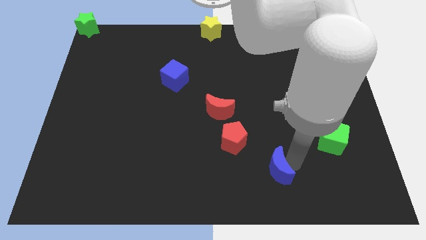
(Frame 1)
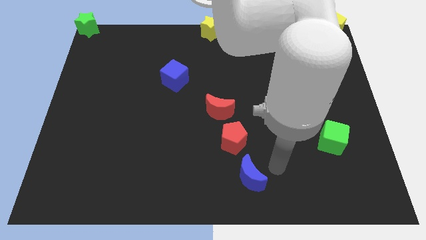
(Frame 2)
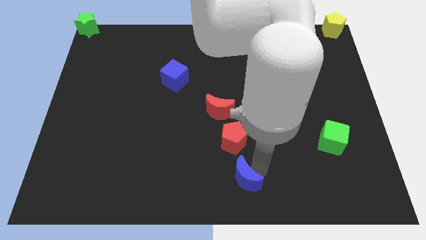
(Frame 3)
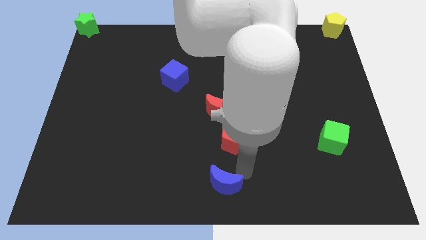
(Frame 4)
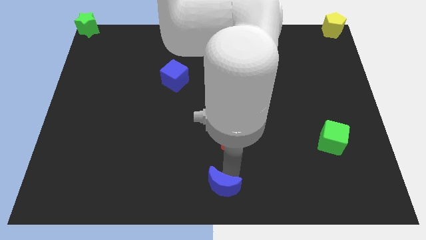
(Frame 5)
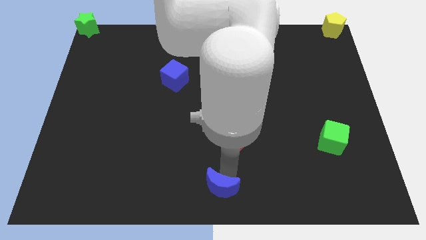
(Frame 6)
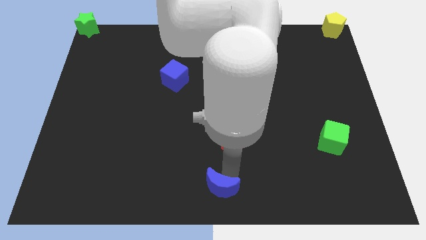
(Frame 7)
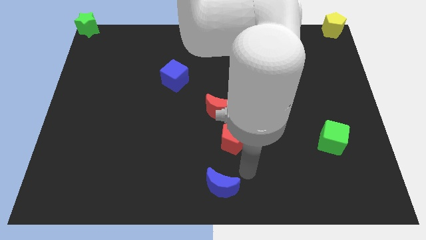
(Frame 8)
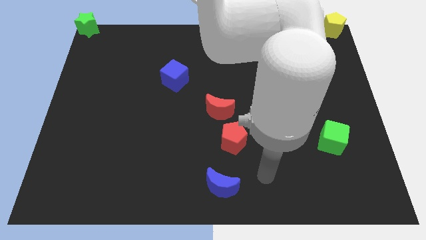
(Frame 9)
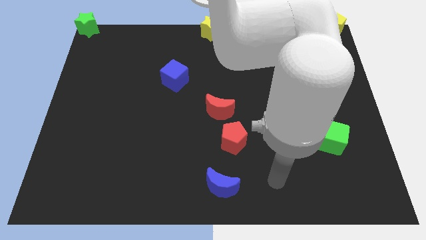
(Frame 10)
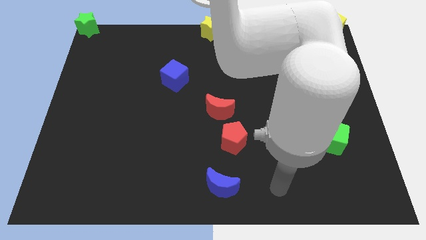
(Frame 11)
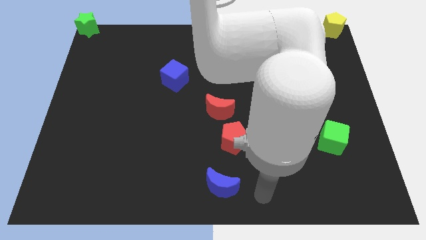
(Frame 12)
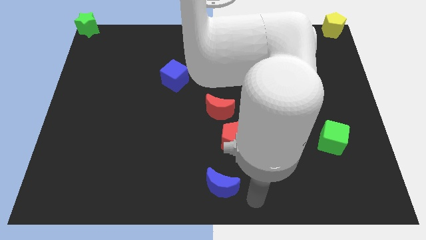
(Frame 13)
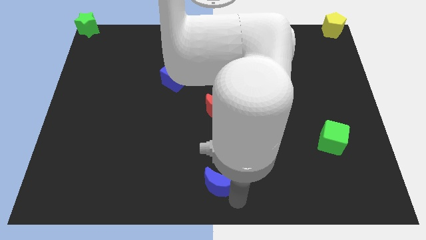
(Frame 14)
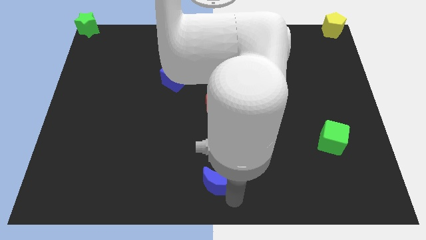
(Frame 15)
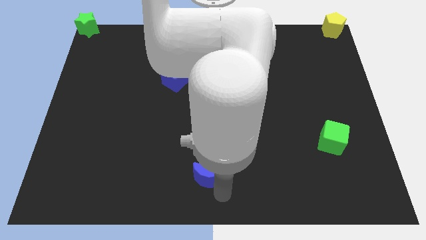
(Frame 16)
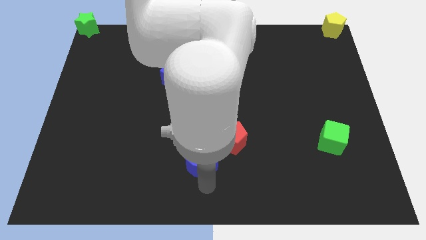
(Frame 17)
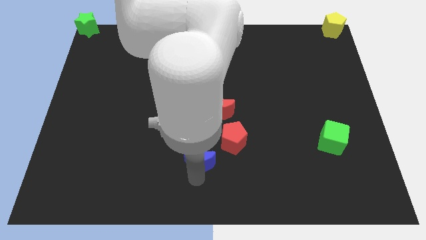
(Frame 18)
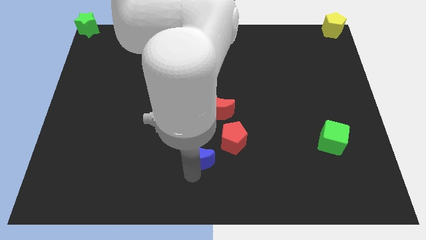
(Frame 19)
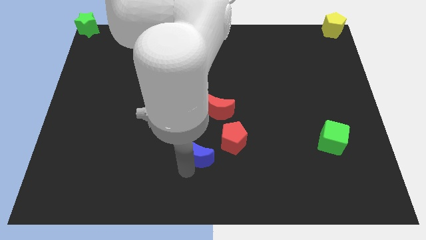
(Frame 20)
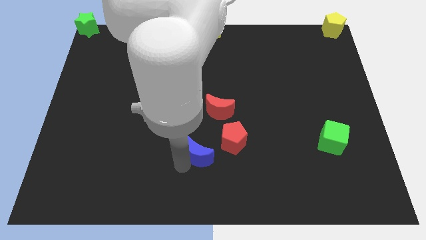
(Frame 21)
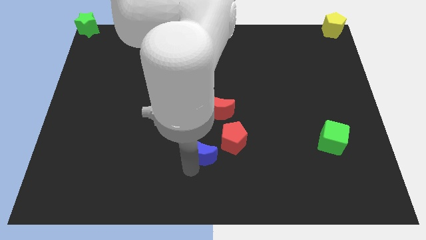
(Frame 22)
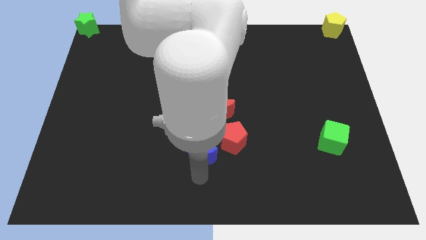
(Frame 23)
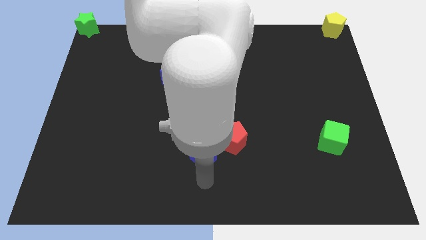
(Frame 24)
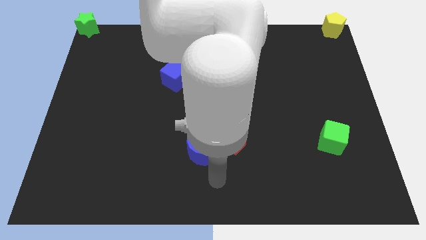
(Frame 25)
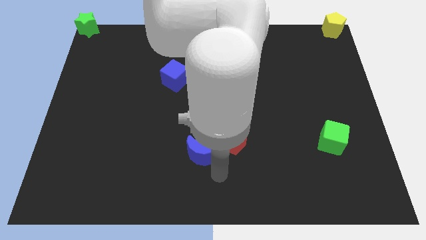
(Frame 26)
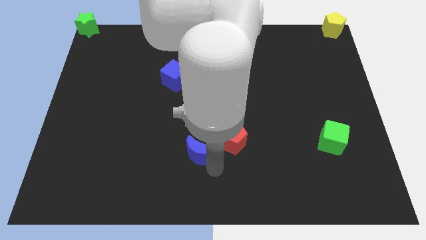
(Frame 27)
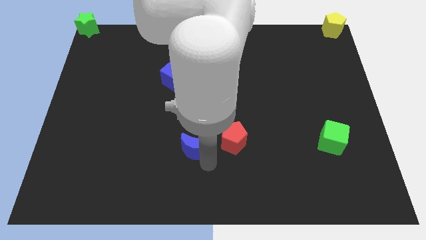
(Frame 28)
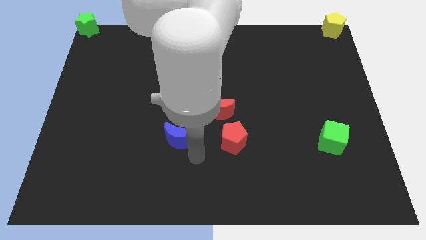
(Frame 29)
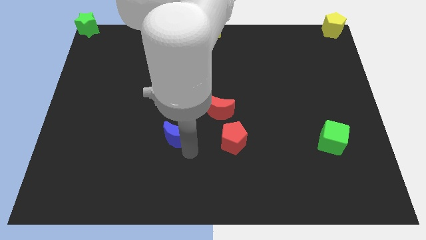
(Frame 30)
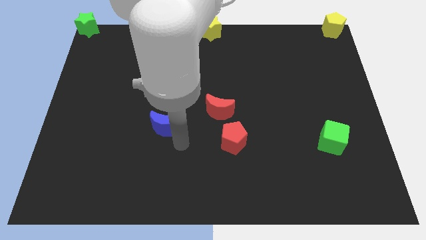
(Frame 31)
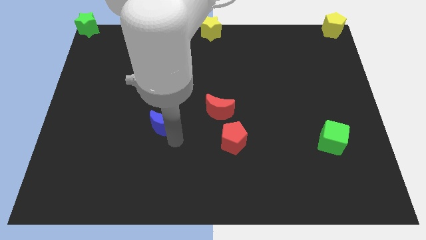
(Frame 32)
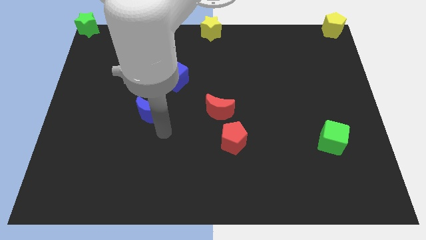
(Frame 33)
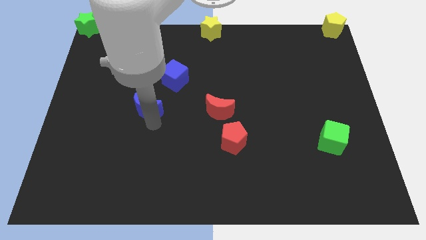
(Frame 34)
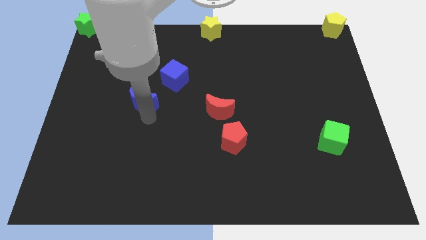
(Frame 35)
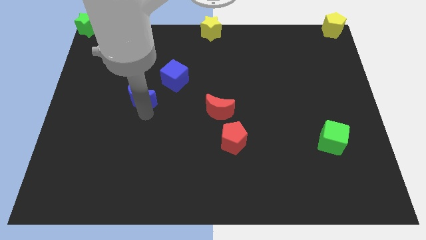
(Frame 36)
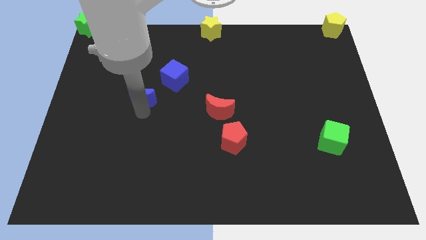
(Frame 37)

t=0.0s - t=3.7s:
place the blue moon below the blue cube

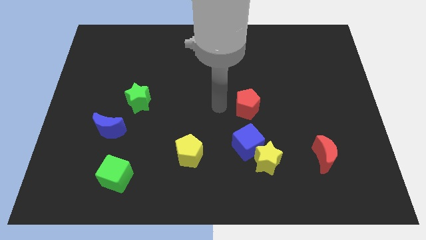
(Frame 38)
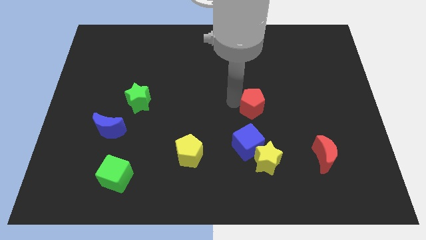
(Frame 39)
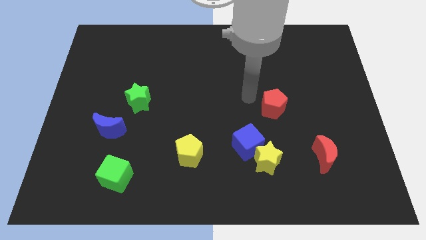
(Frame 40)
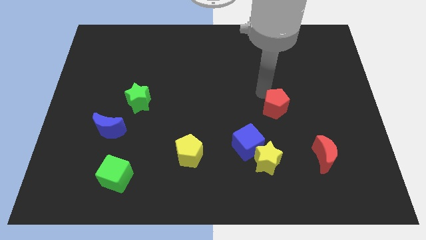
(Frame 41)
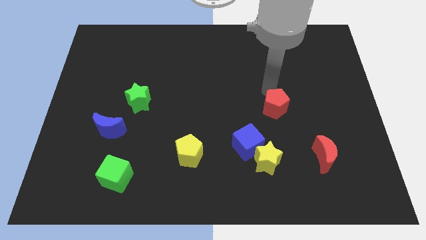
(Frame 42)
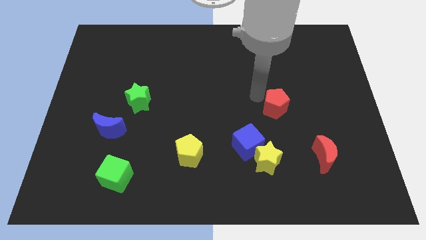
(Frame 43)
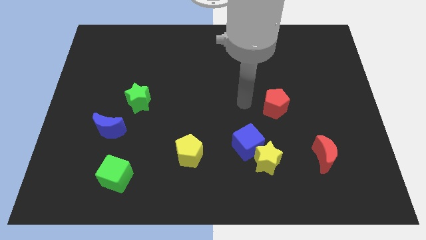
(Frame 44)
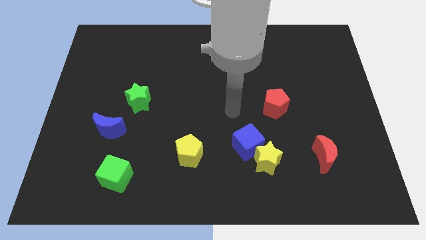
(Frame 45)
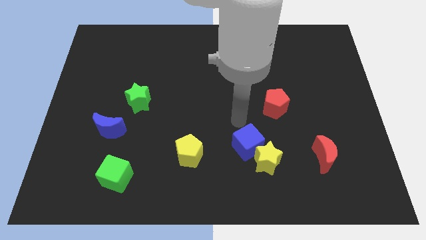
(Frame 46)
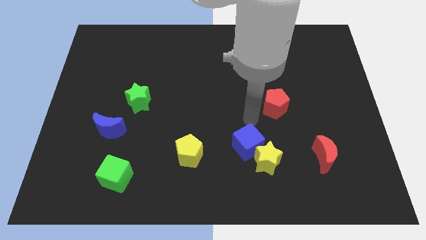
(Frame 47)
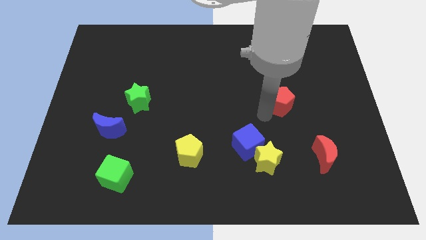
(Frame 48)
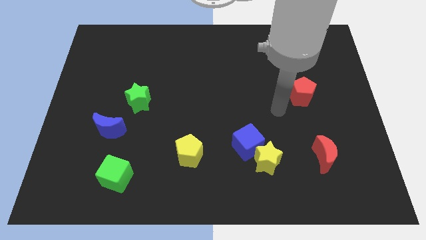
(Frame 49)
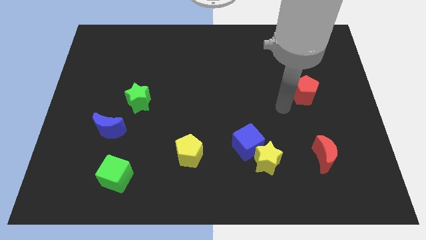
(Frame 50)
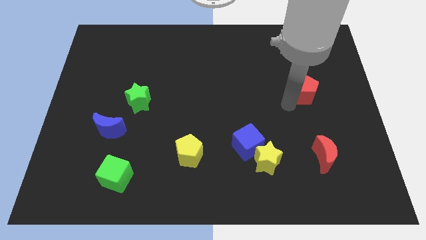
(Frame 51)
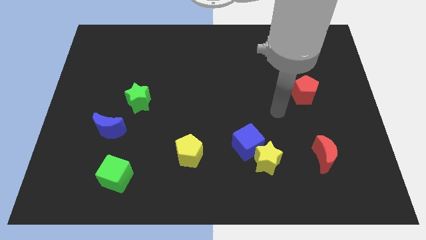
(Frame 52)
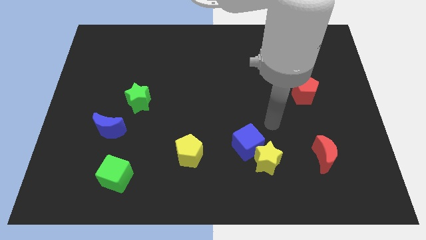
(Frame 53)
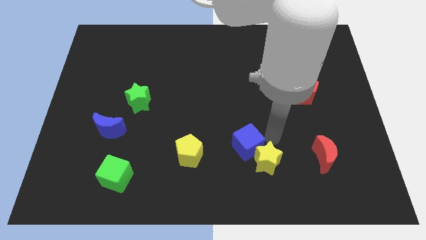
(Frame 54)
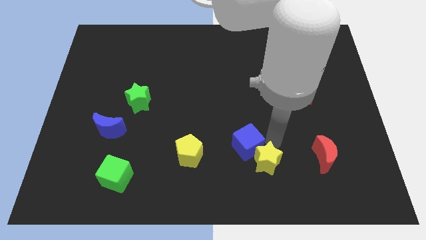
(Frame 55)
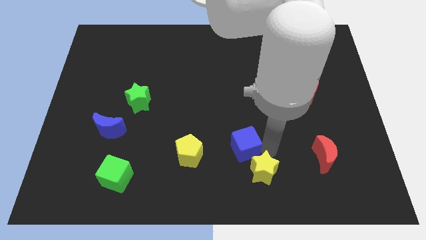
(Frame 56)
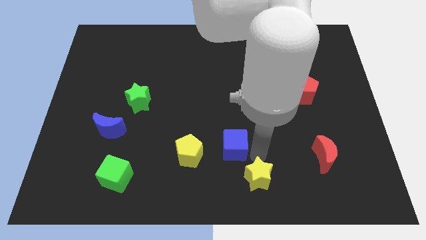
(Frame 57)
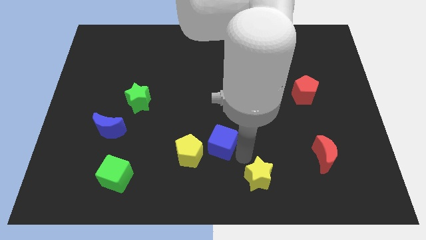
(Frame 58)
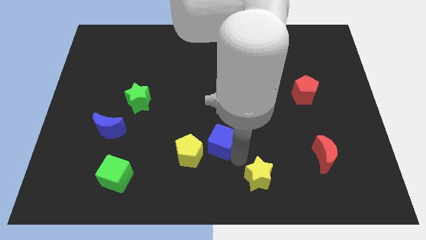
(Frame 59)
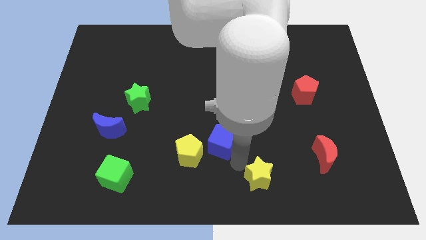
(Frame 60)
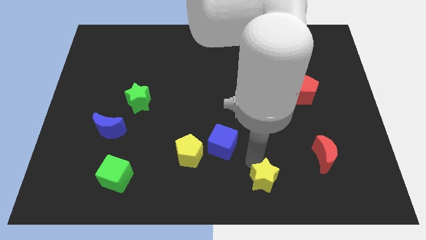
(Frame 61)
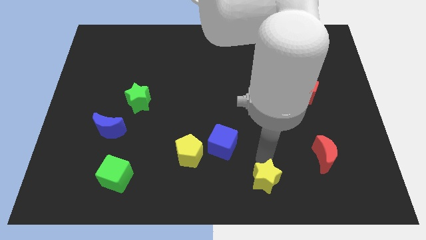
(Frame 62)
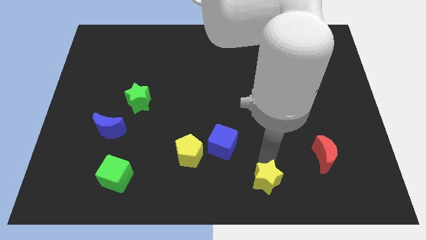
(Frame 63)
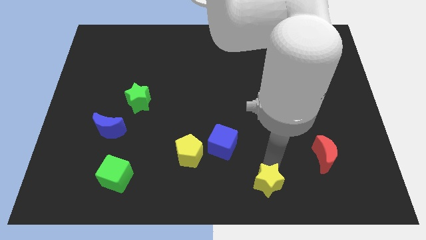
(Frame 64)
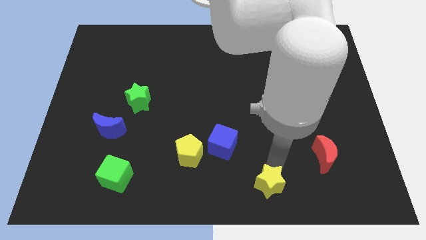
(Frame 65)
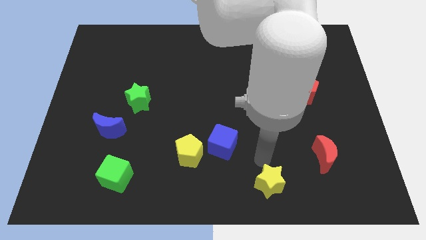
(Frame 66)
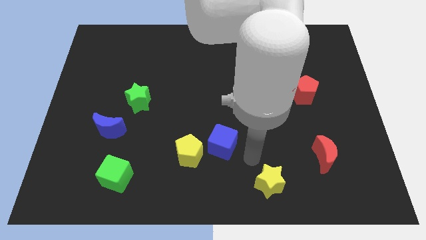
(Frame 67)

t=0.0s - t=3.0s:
separate the yellow star away from the blue cube

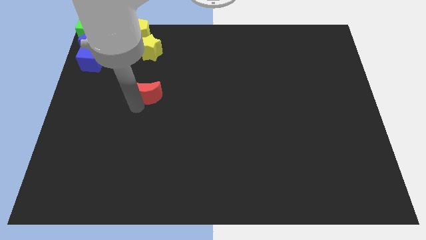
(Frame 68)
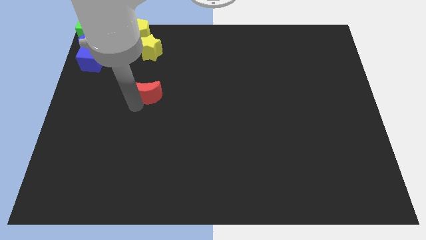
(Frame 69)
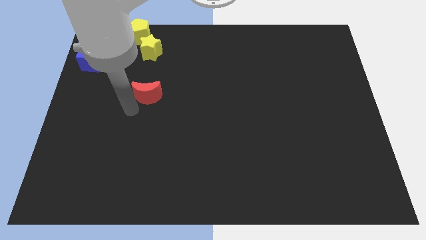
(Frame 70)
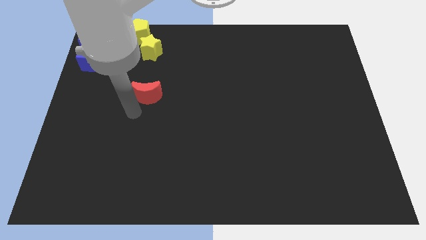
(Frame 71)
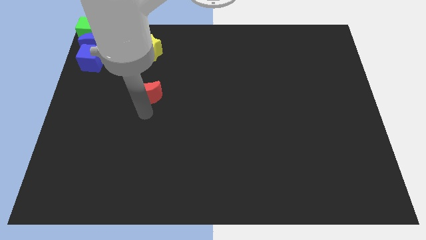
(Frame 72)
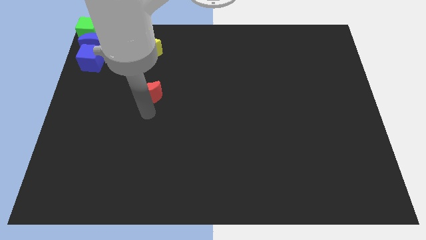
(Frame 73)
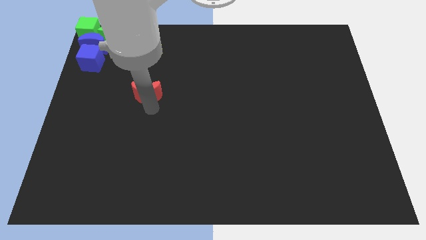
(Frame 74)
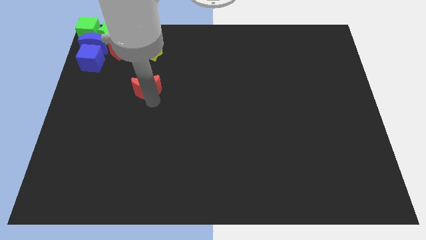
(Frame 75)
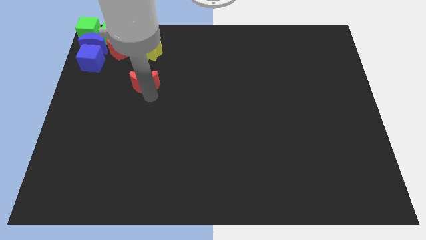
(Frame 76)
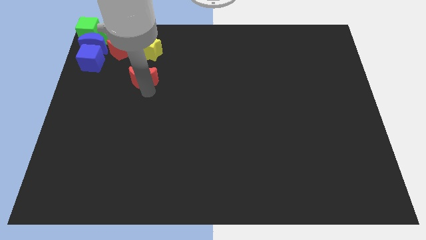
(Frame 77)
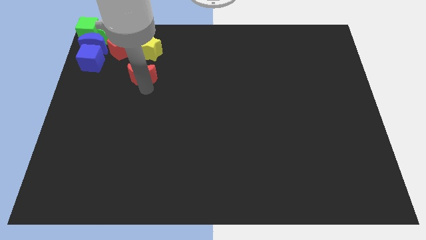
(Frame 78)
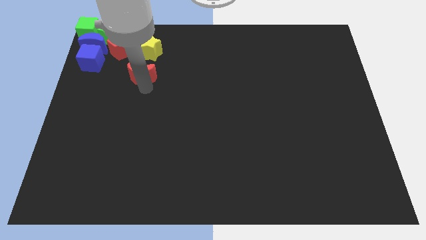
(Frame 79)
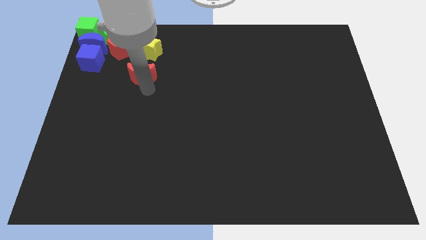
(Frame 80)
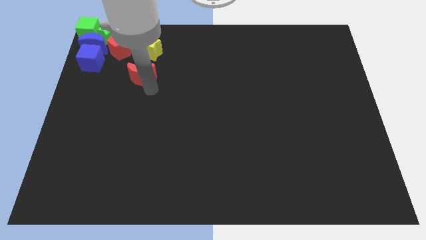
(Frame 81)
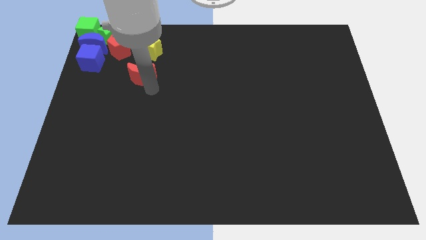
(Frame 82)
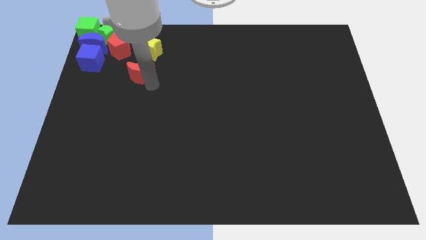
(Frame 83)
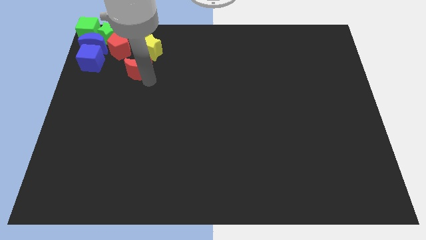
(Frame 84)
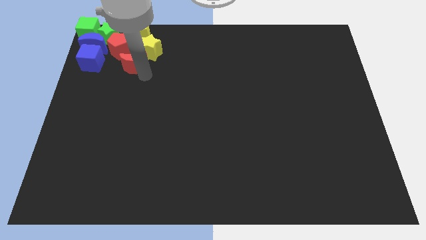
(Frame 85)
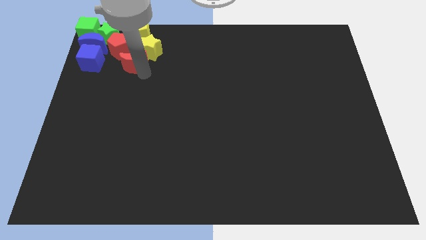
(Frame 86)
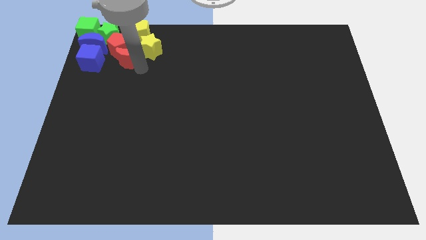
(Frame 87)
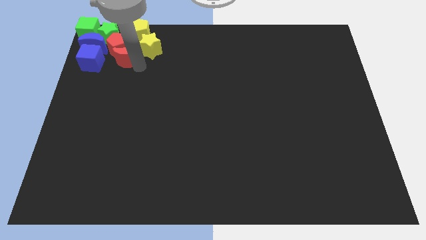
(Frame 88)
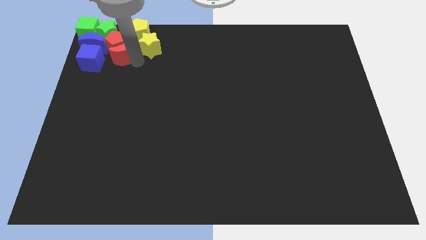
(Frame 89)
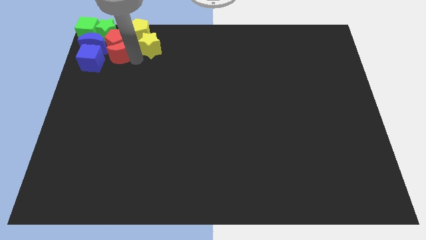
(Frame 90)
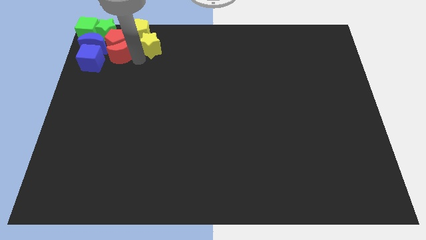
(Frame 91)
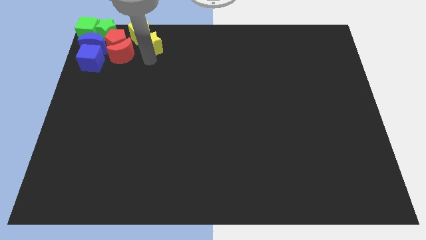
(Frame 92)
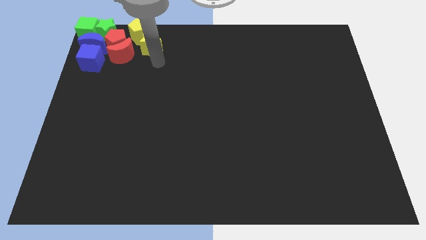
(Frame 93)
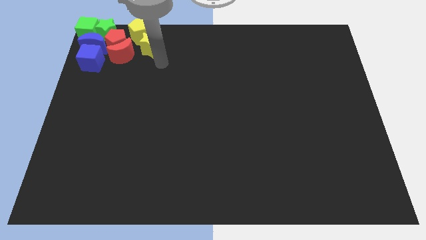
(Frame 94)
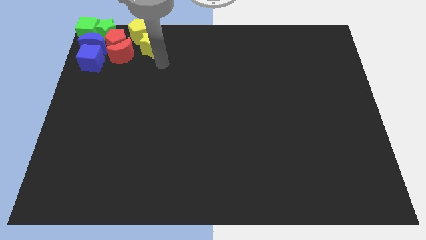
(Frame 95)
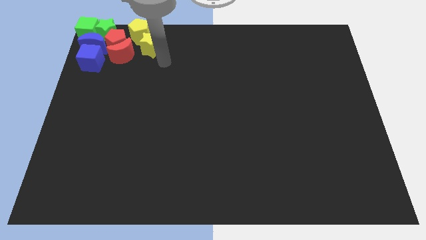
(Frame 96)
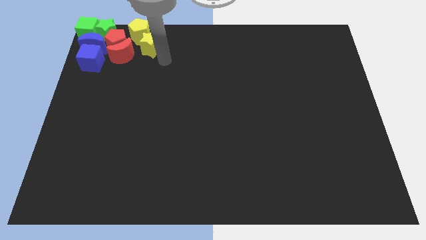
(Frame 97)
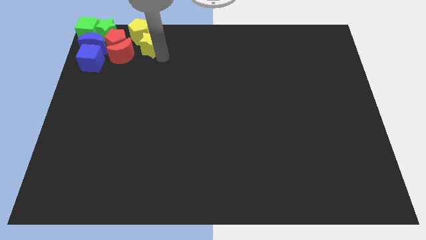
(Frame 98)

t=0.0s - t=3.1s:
push the red crescent into the red pentagon
